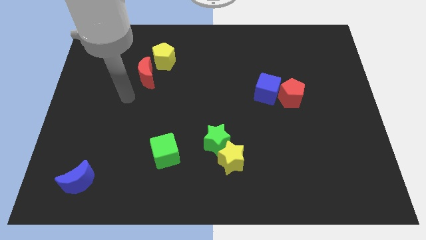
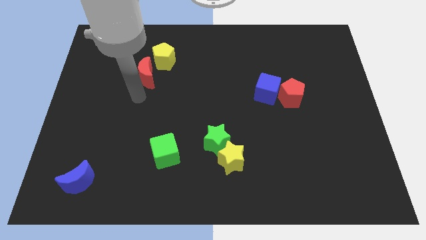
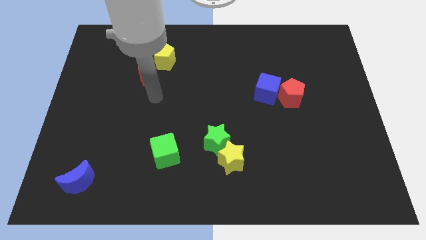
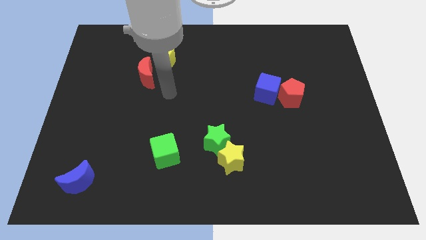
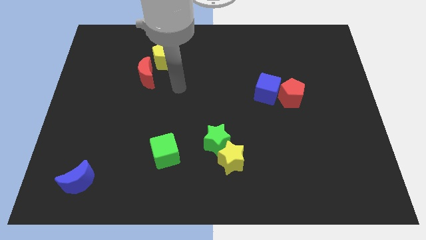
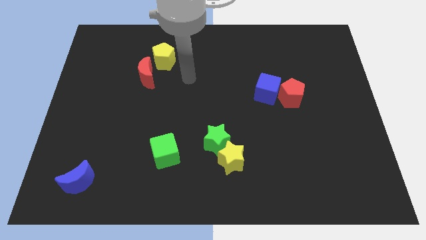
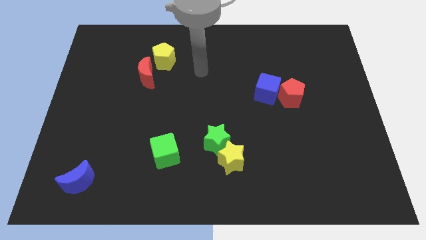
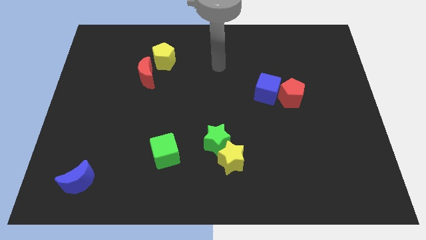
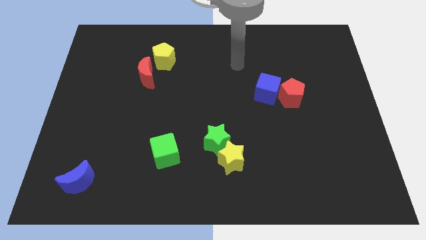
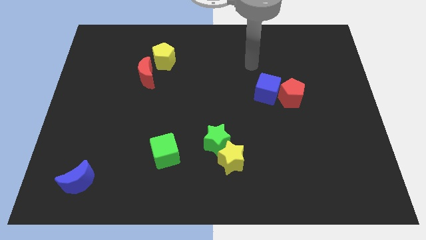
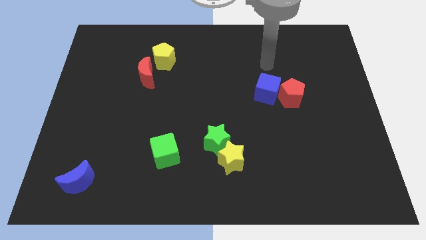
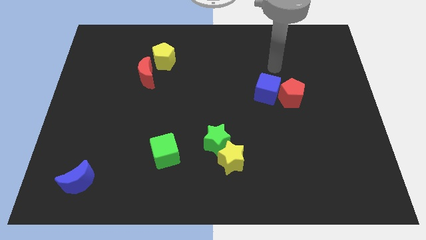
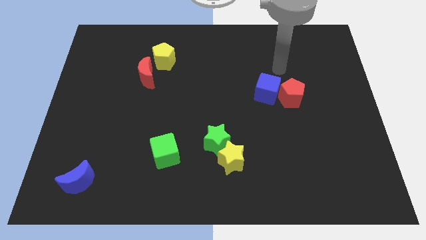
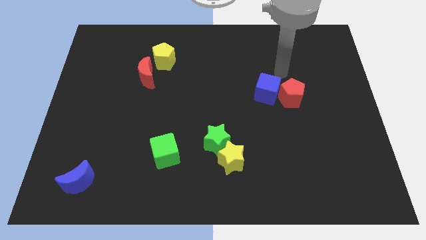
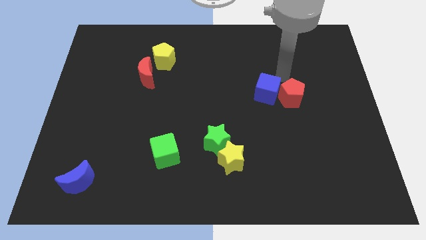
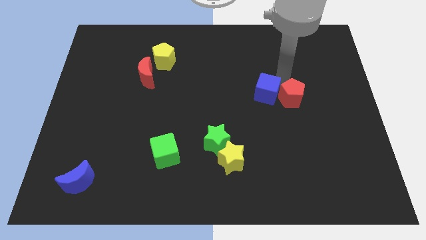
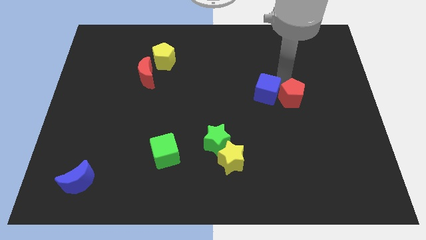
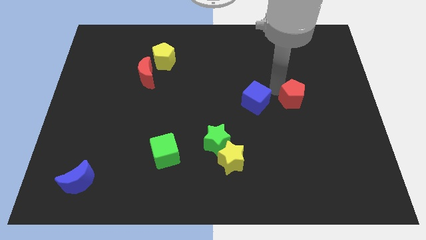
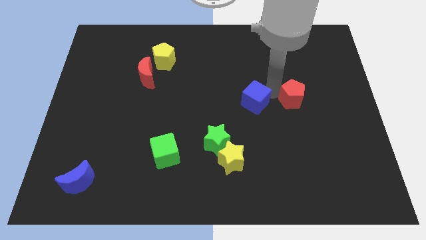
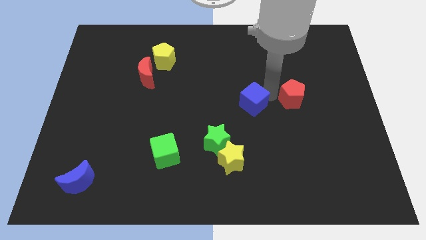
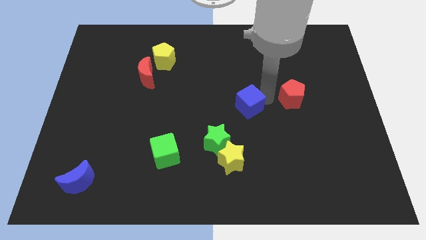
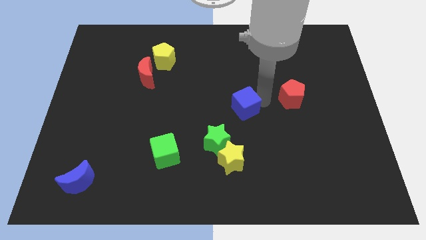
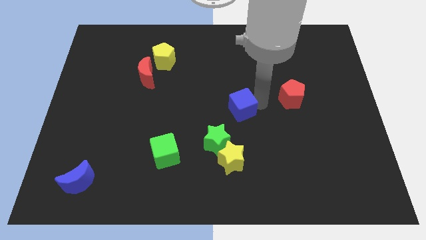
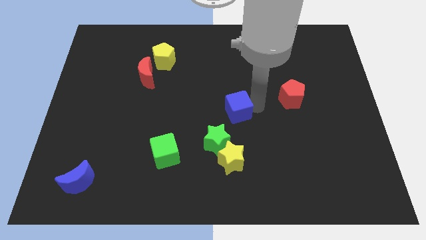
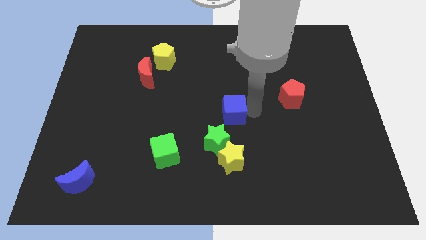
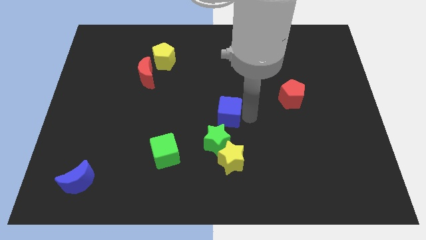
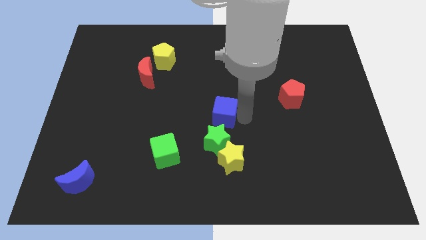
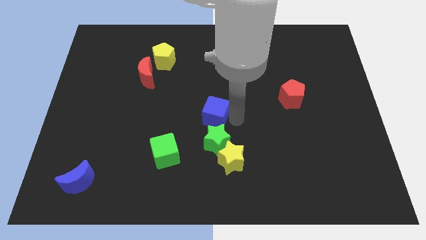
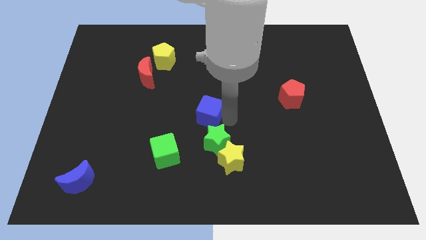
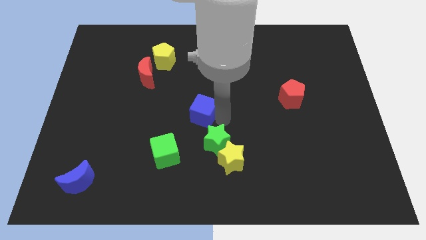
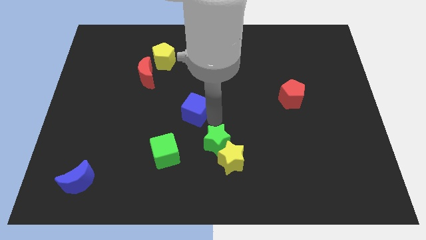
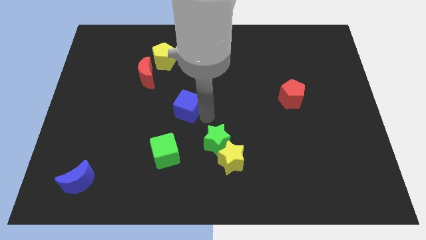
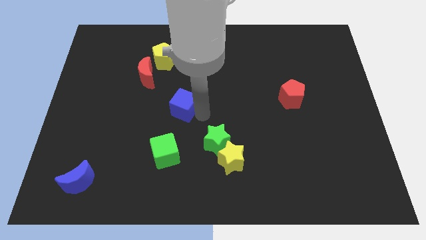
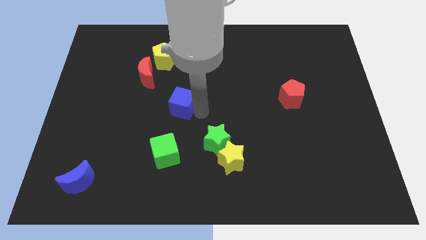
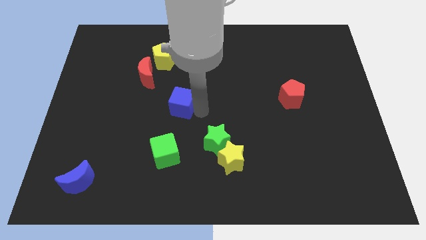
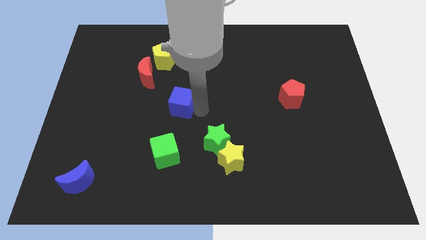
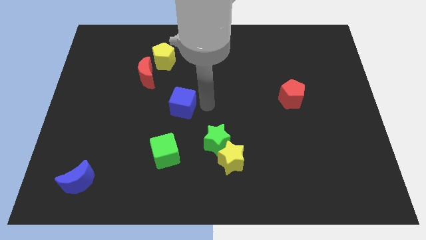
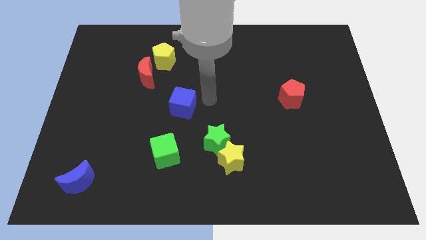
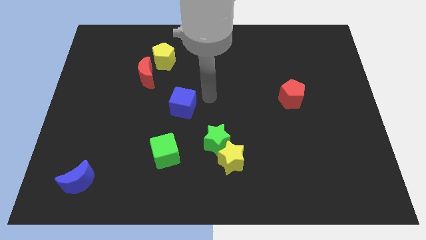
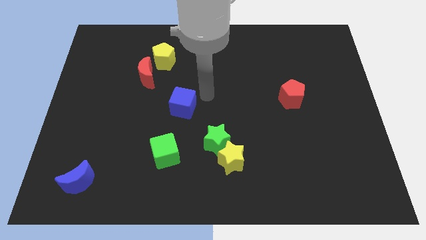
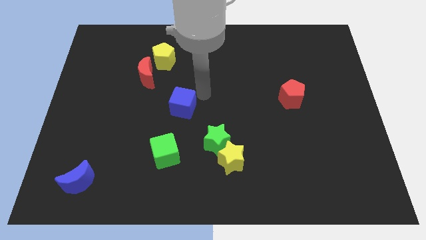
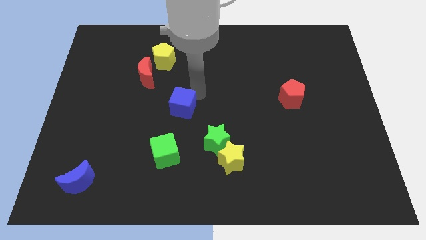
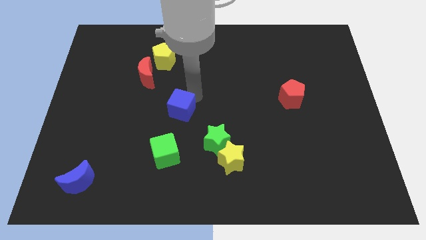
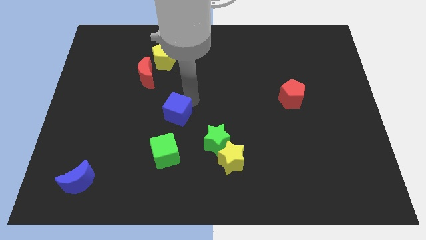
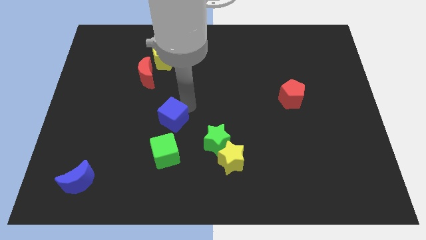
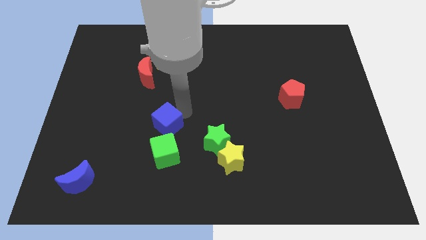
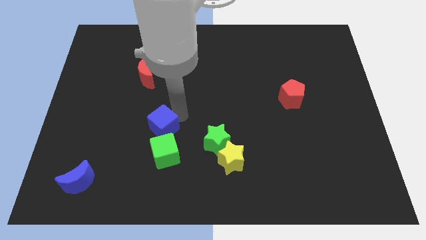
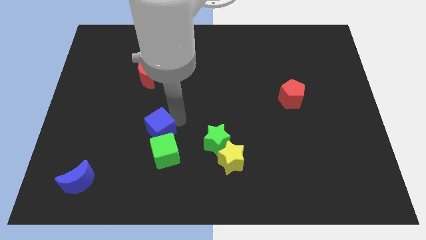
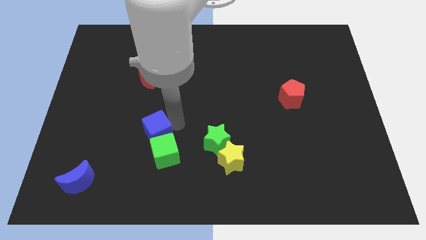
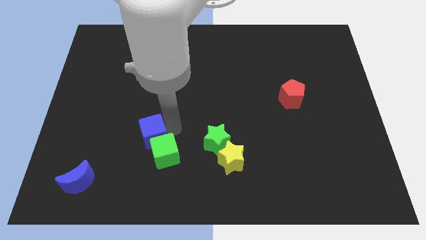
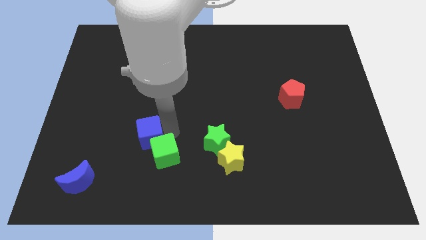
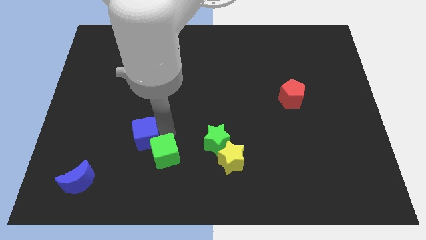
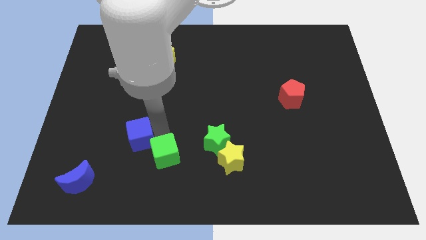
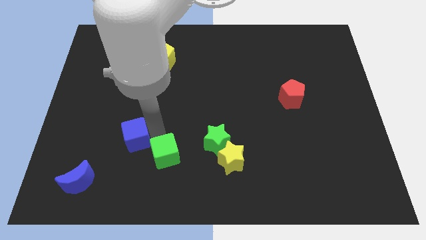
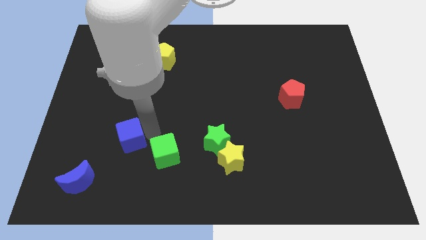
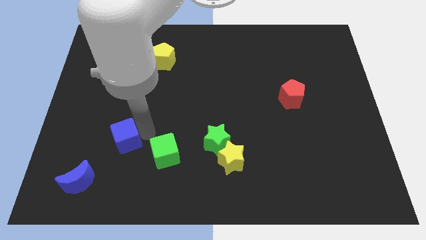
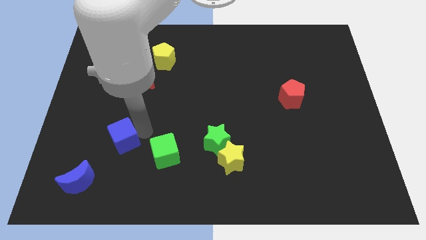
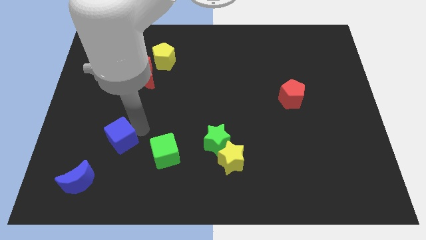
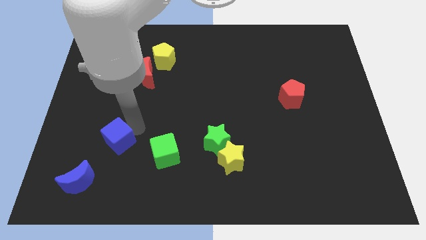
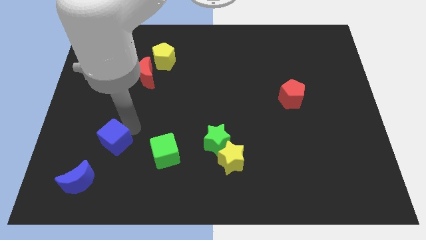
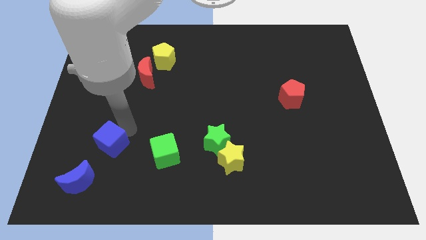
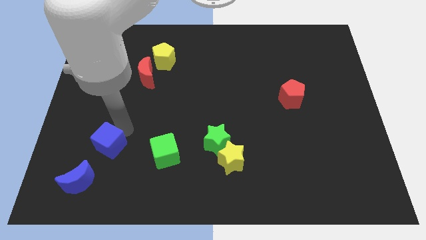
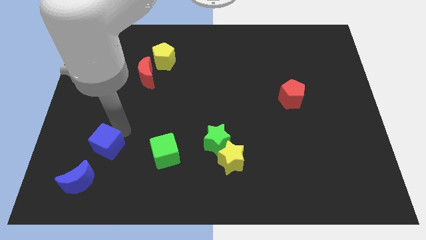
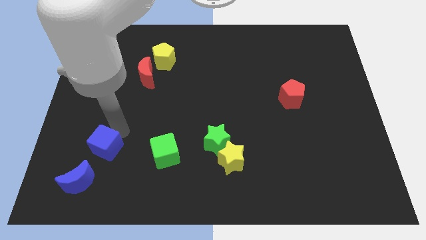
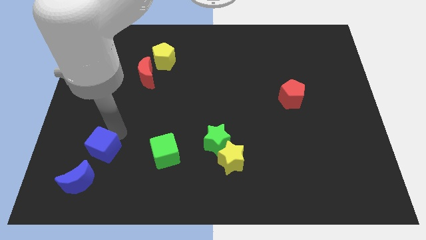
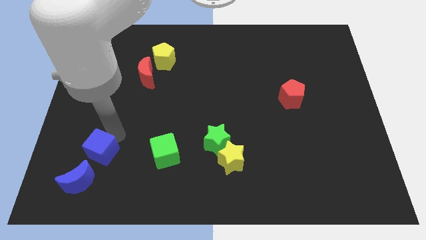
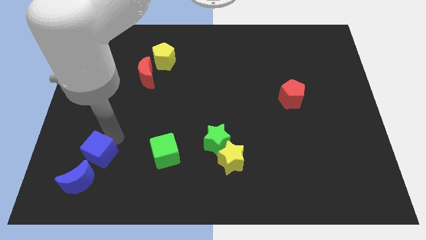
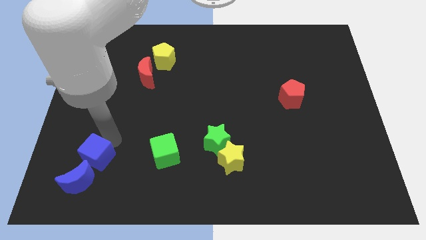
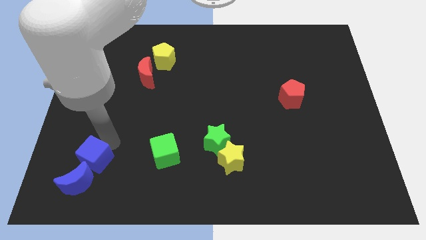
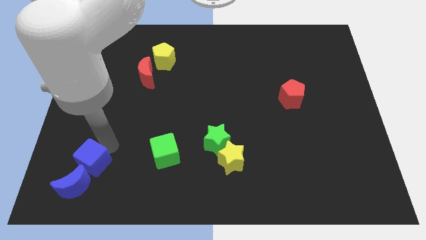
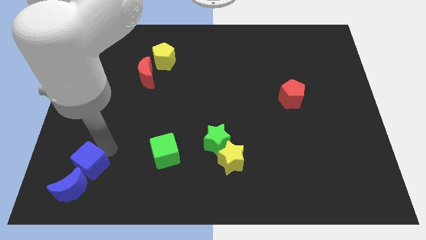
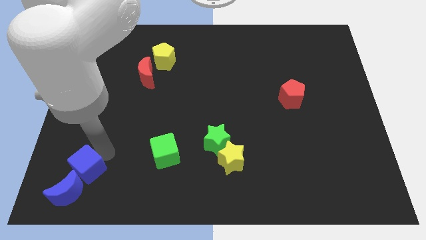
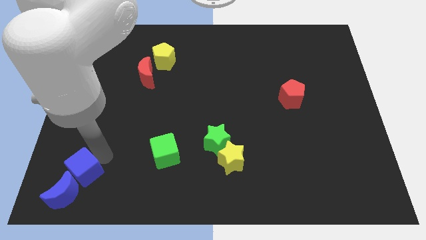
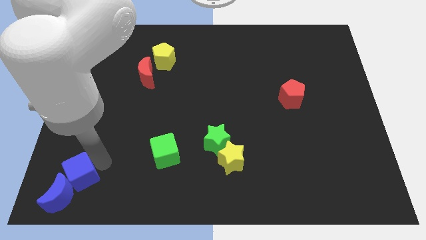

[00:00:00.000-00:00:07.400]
slide the blue cube close to the blue moon

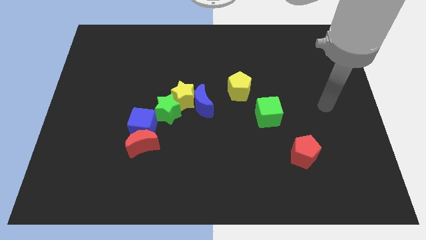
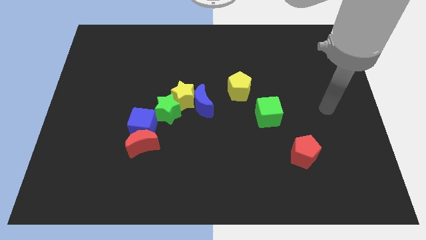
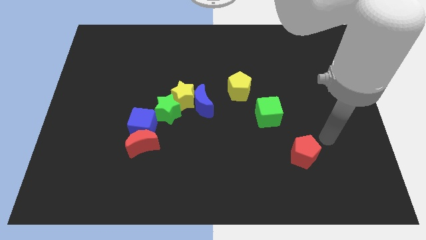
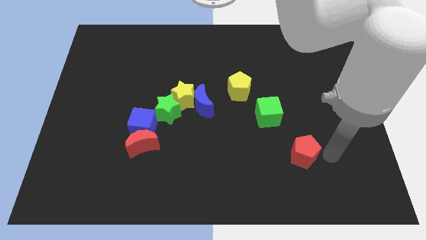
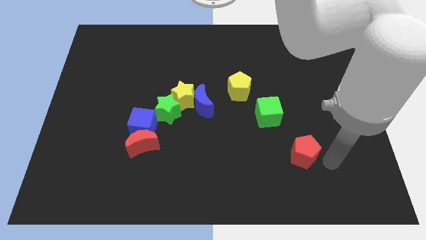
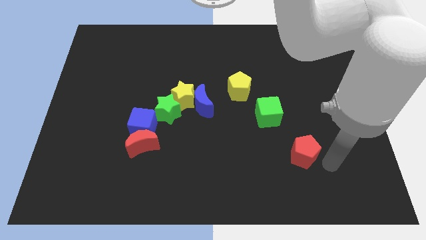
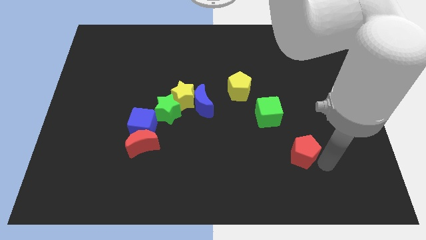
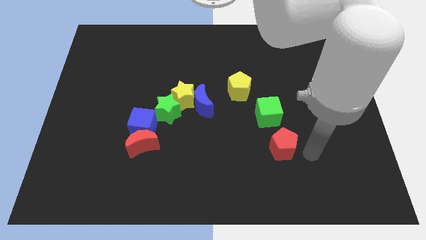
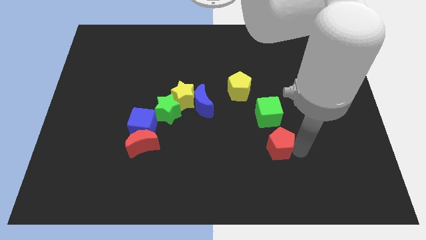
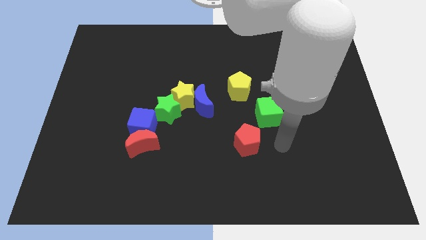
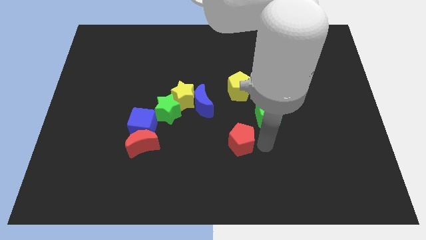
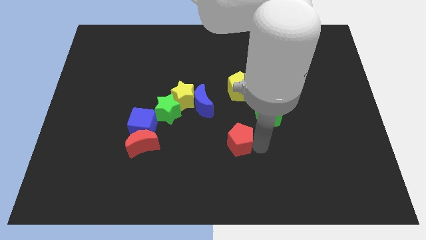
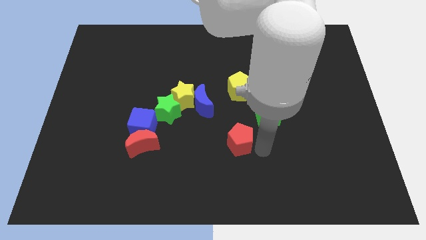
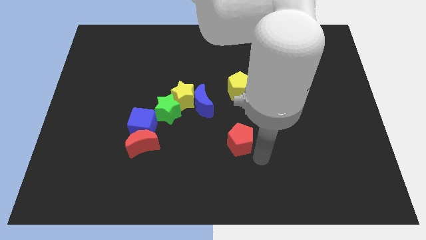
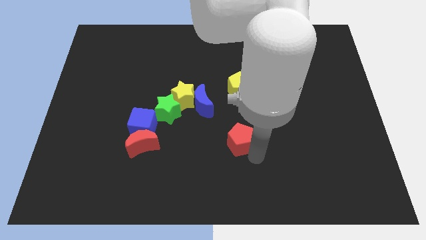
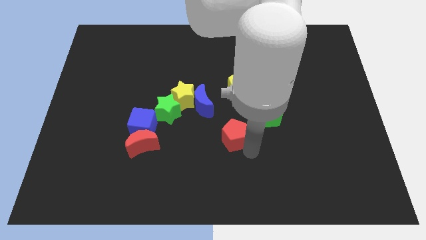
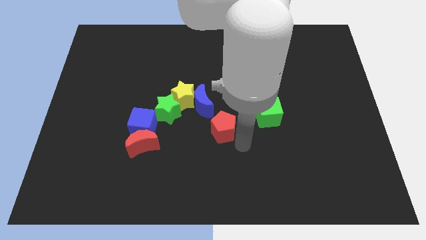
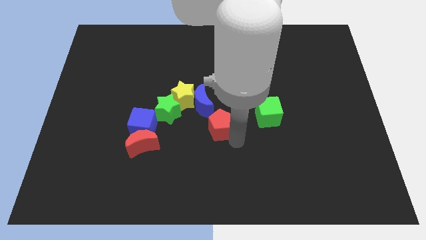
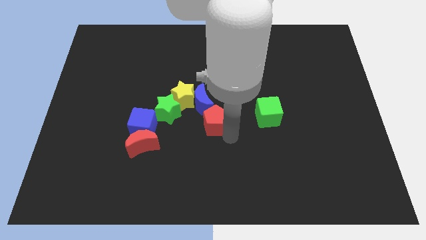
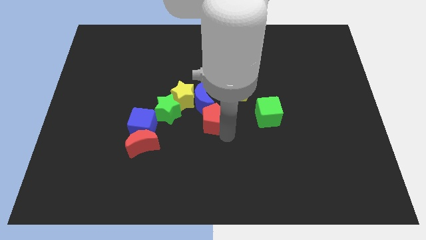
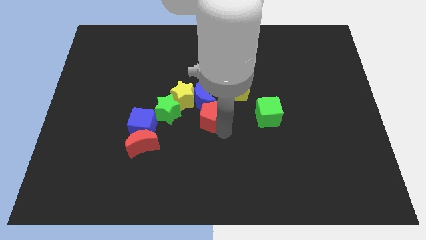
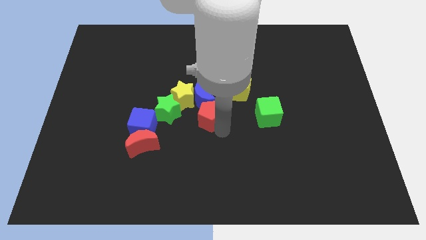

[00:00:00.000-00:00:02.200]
move the red pentagon towards the blue moon
